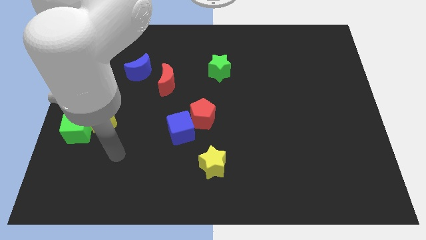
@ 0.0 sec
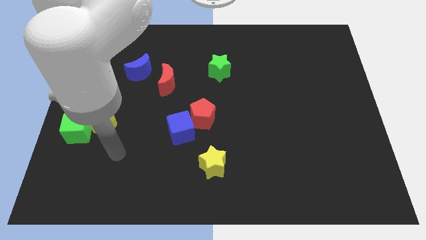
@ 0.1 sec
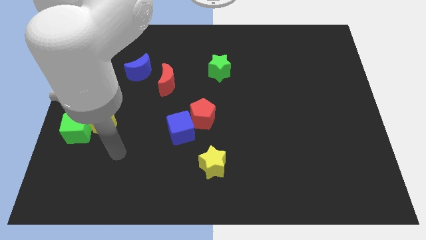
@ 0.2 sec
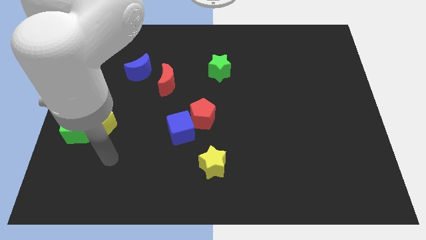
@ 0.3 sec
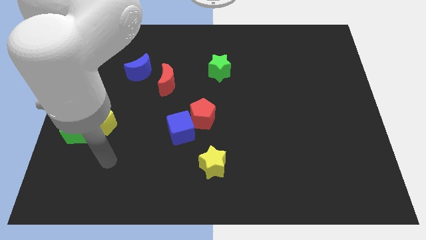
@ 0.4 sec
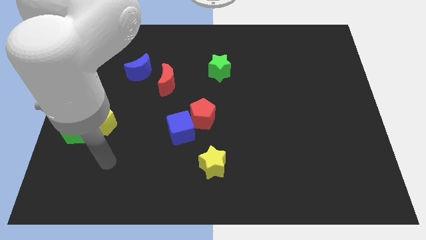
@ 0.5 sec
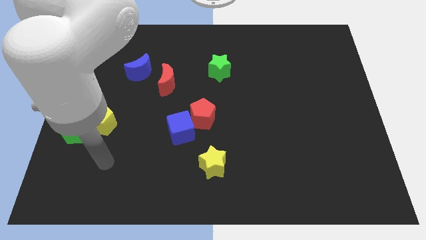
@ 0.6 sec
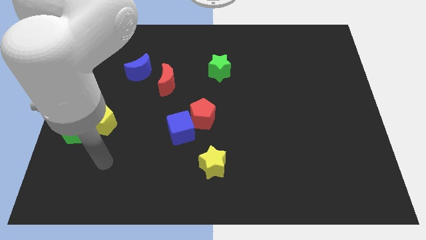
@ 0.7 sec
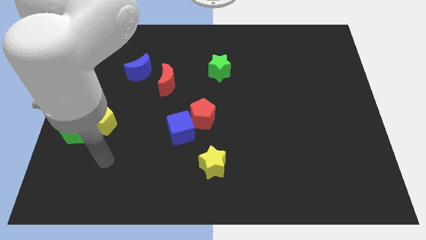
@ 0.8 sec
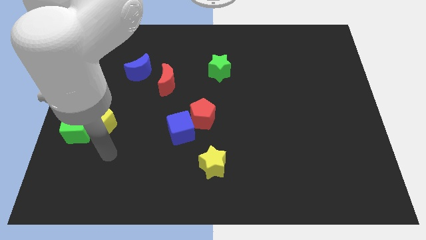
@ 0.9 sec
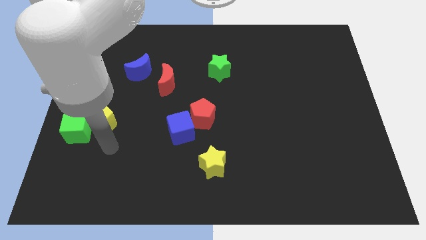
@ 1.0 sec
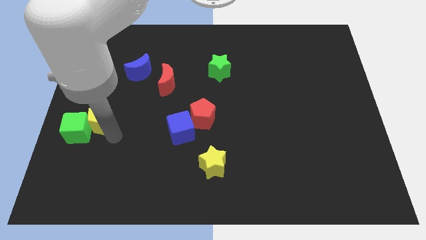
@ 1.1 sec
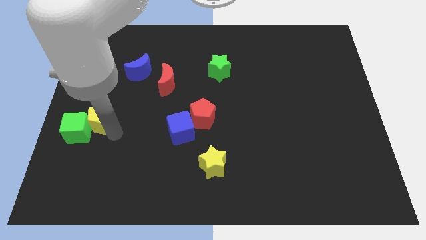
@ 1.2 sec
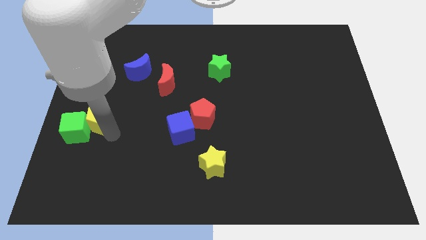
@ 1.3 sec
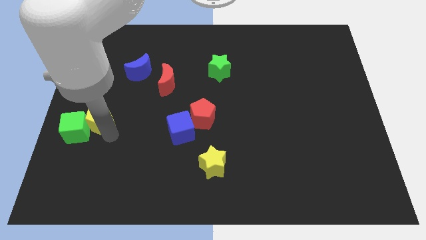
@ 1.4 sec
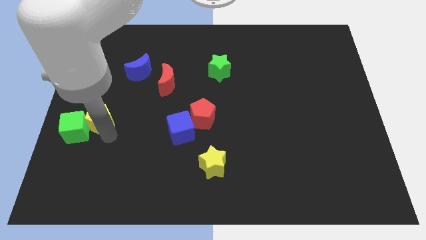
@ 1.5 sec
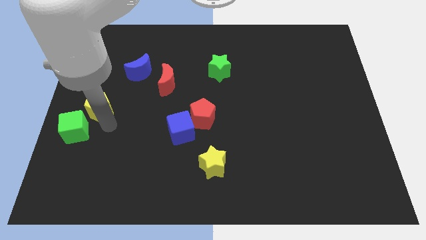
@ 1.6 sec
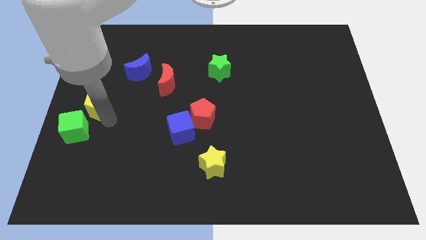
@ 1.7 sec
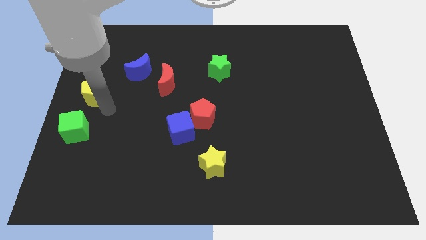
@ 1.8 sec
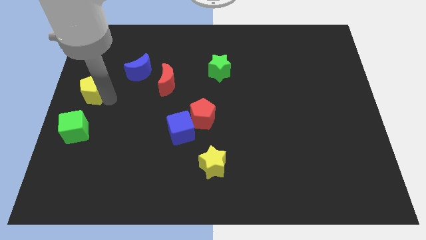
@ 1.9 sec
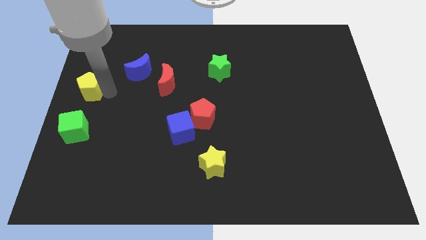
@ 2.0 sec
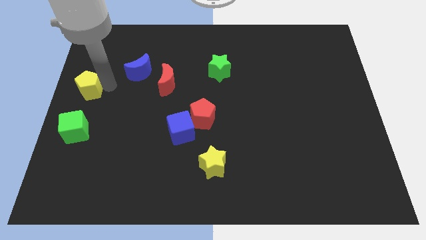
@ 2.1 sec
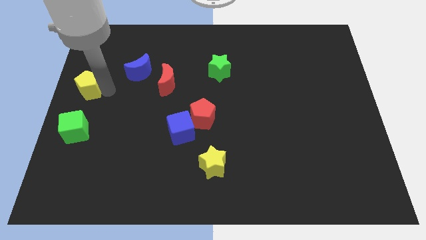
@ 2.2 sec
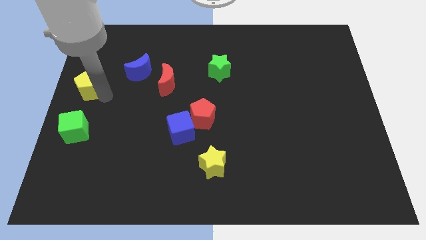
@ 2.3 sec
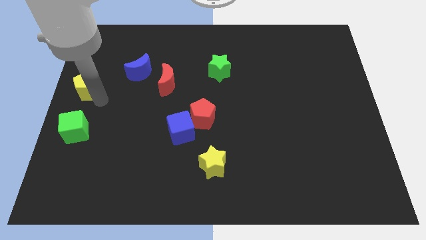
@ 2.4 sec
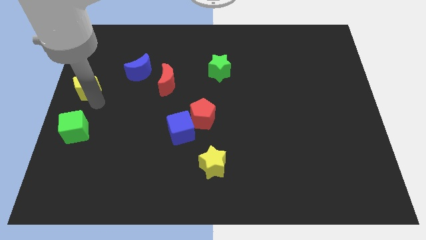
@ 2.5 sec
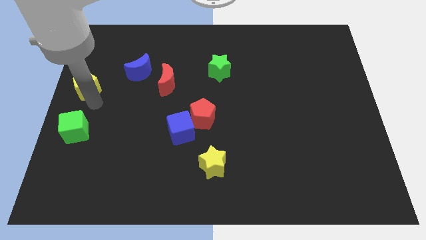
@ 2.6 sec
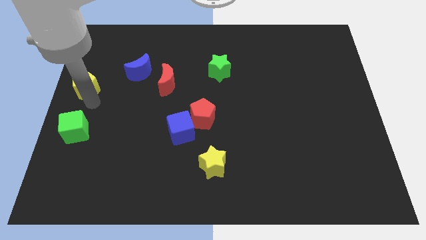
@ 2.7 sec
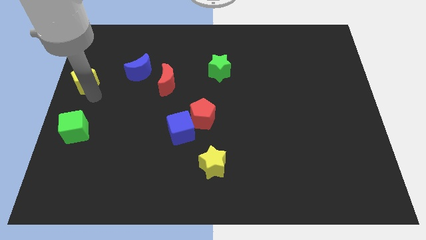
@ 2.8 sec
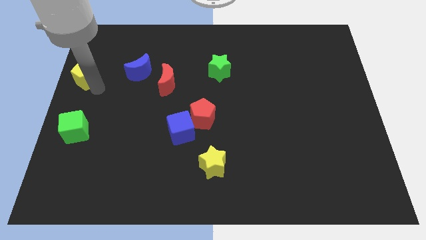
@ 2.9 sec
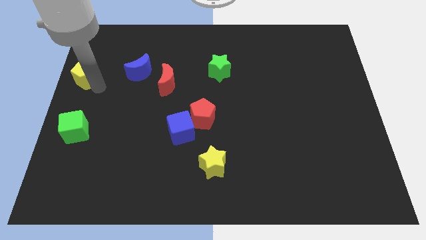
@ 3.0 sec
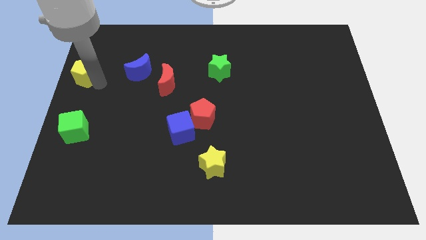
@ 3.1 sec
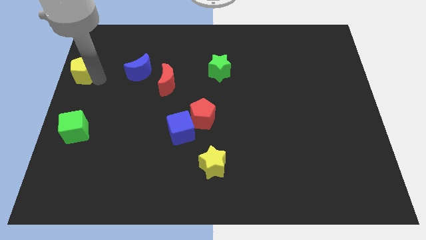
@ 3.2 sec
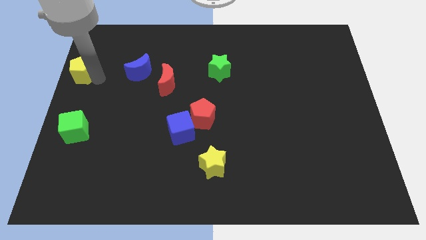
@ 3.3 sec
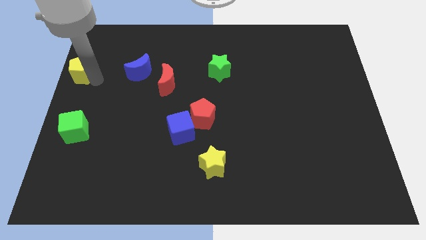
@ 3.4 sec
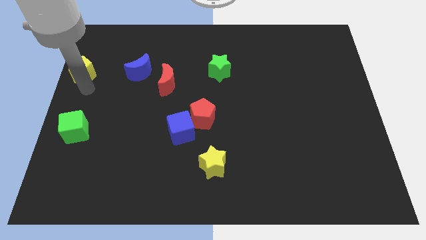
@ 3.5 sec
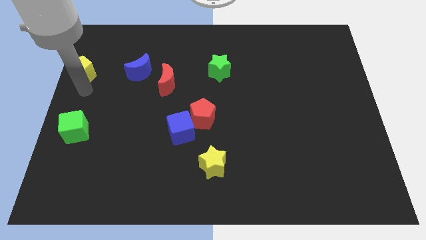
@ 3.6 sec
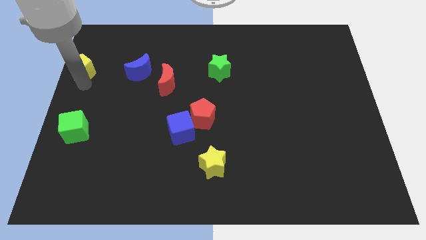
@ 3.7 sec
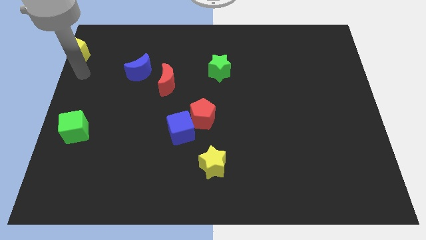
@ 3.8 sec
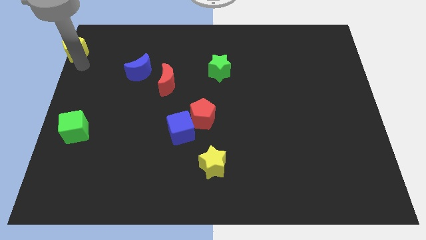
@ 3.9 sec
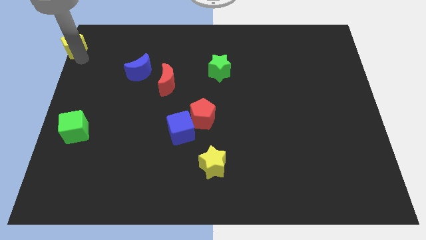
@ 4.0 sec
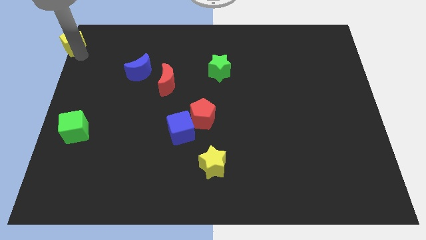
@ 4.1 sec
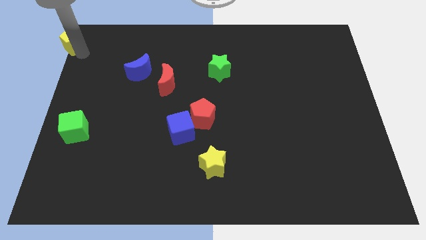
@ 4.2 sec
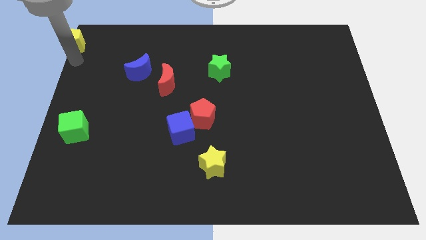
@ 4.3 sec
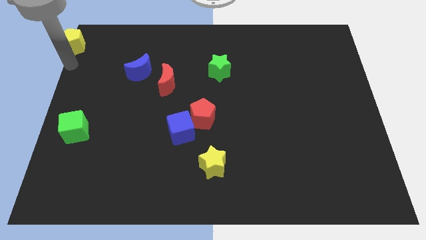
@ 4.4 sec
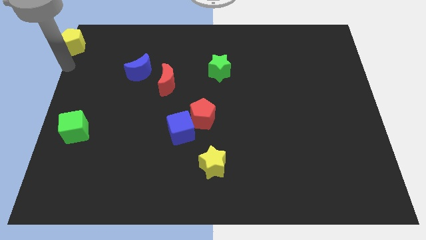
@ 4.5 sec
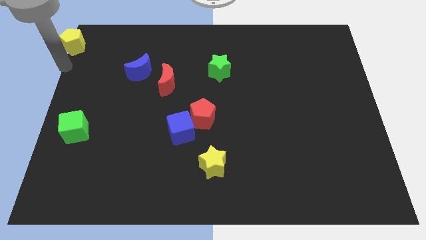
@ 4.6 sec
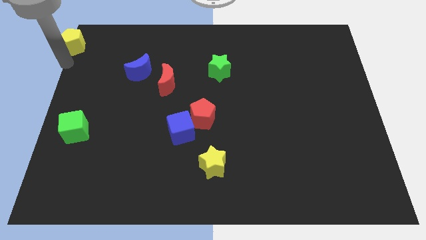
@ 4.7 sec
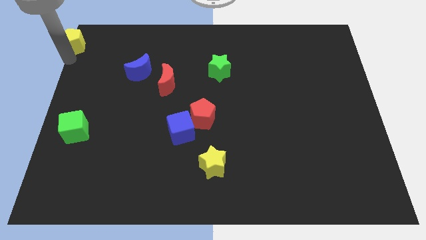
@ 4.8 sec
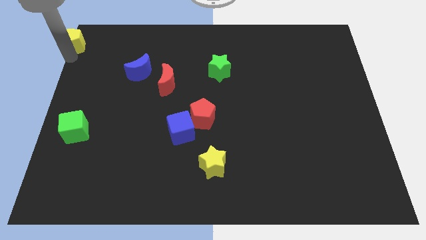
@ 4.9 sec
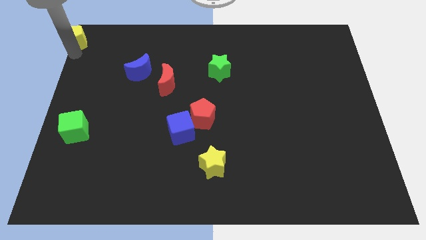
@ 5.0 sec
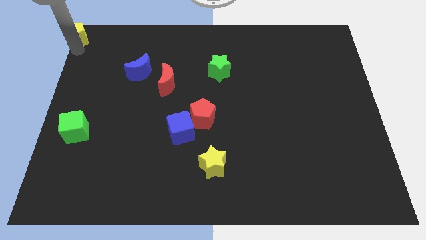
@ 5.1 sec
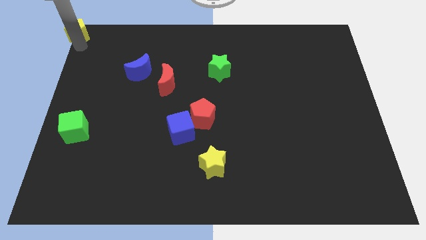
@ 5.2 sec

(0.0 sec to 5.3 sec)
push the yellow pentagon to the top left corner of the board

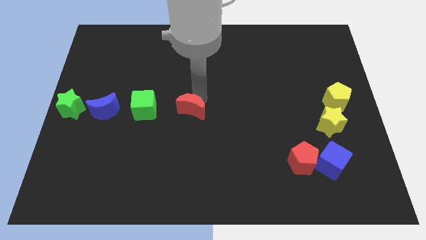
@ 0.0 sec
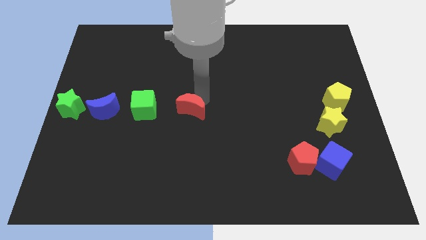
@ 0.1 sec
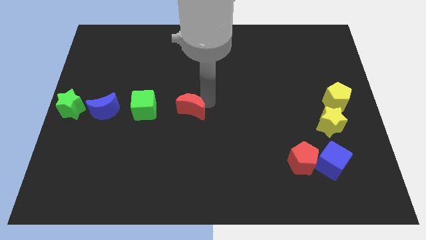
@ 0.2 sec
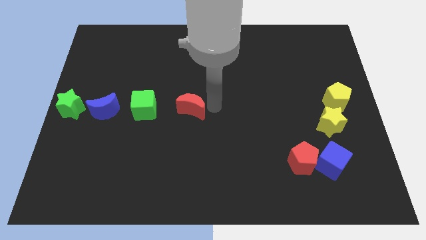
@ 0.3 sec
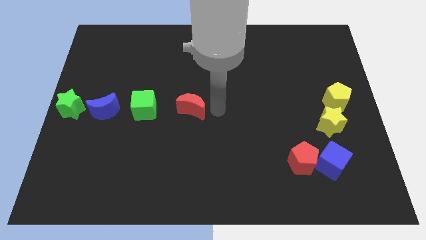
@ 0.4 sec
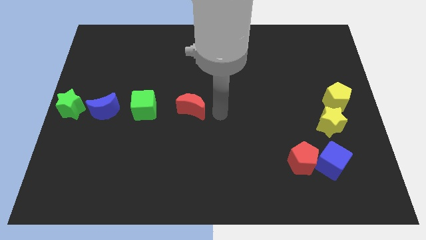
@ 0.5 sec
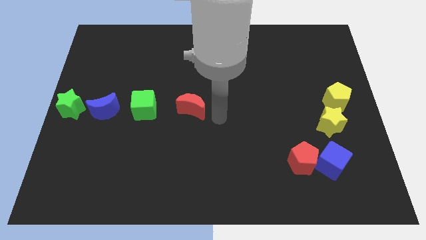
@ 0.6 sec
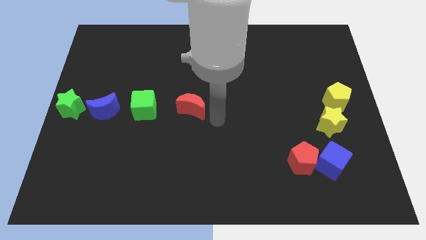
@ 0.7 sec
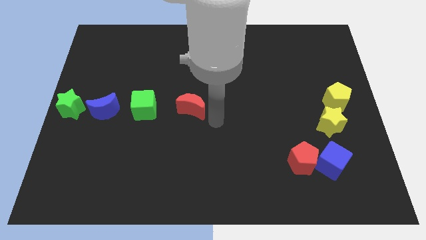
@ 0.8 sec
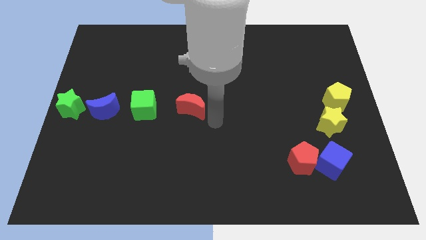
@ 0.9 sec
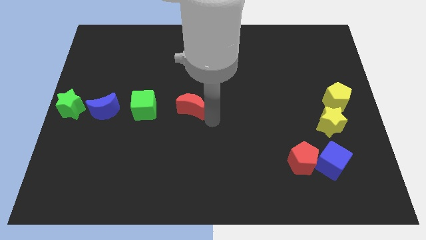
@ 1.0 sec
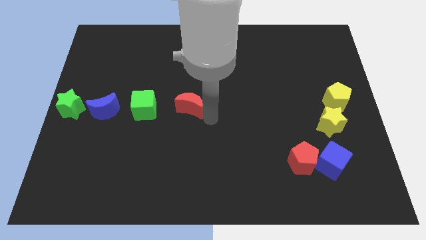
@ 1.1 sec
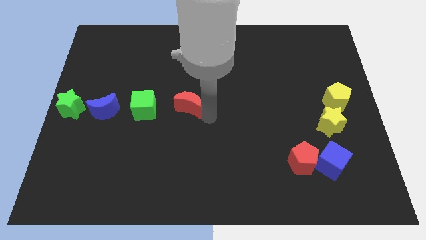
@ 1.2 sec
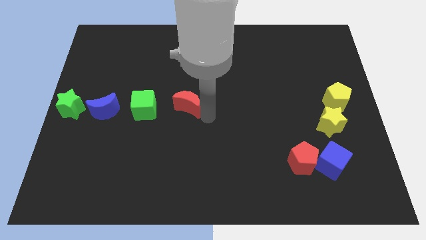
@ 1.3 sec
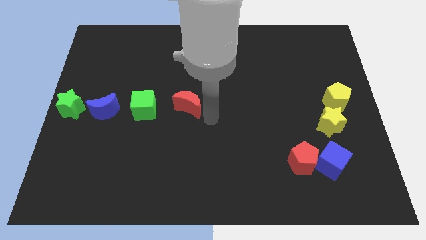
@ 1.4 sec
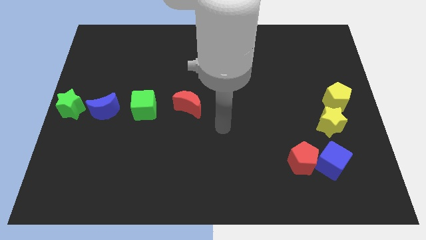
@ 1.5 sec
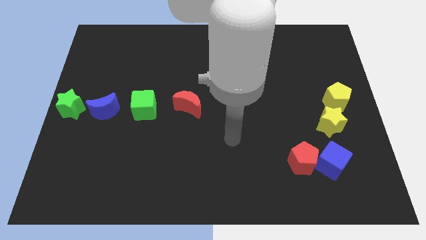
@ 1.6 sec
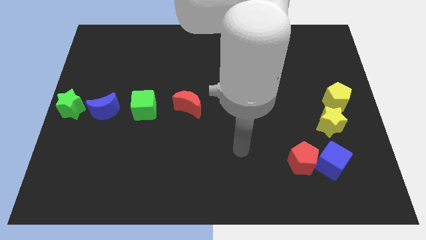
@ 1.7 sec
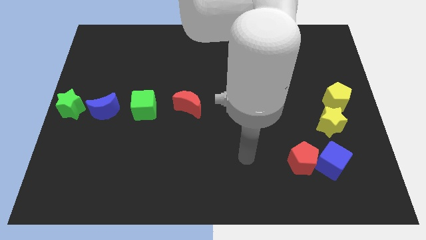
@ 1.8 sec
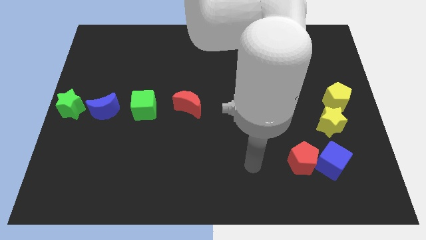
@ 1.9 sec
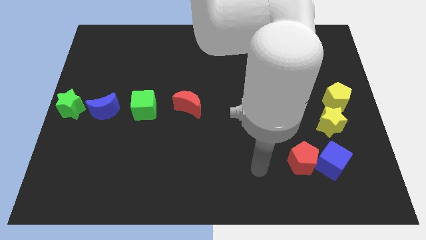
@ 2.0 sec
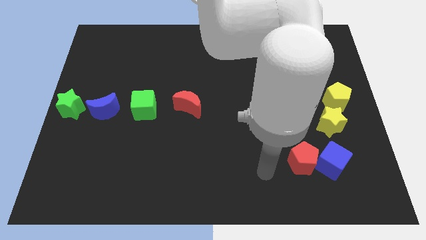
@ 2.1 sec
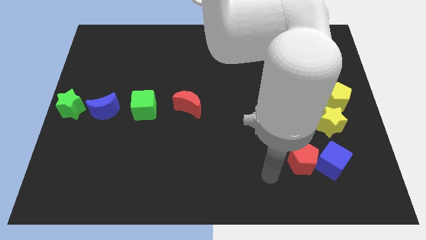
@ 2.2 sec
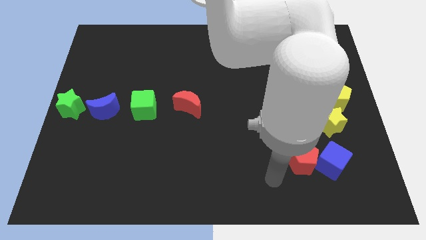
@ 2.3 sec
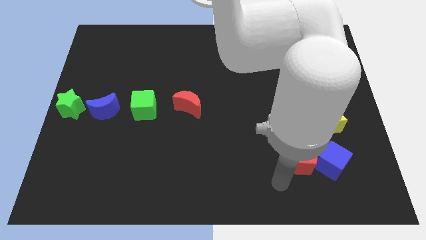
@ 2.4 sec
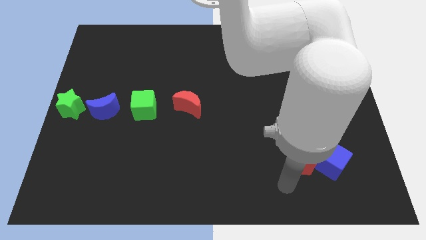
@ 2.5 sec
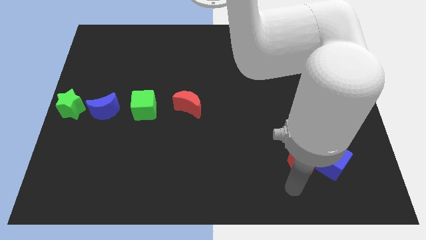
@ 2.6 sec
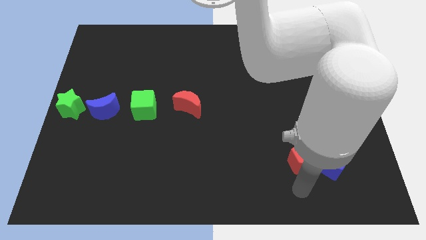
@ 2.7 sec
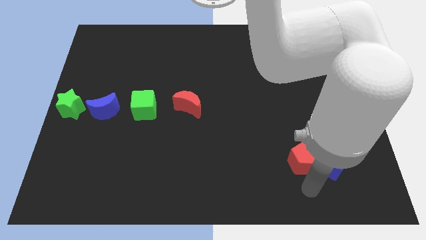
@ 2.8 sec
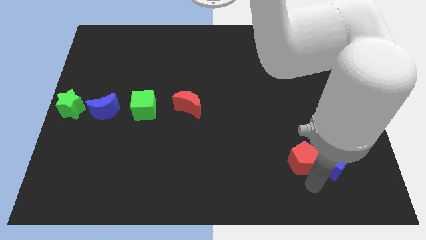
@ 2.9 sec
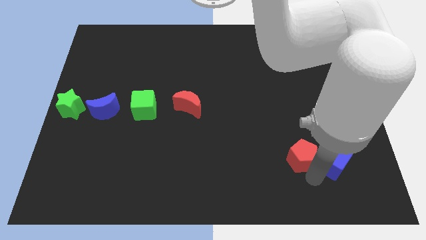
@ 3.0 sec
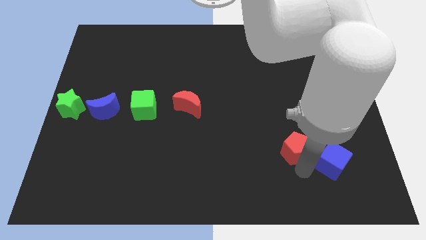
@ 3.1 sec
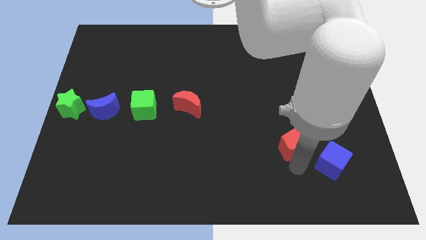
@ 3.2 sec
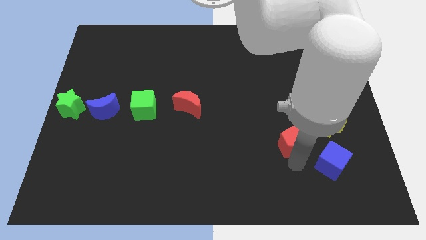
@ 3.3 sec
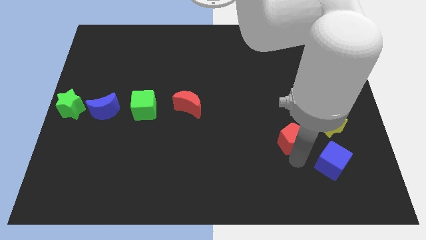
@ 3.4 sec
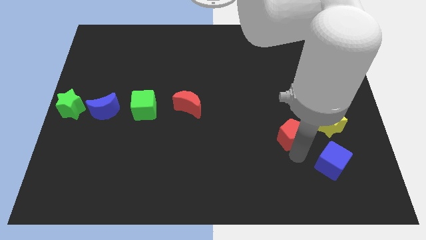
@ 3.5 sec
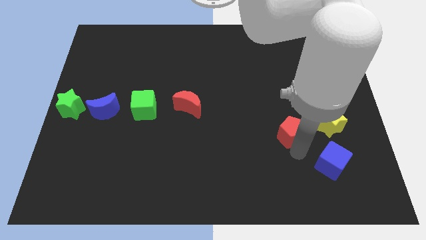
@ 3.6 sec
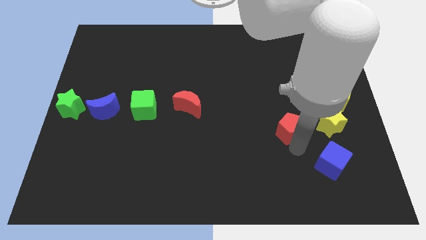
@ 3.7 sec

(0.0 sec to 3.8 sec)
place the red pentagon diagonal to the blue cube
